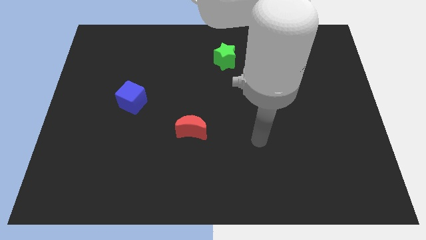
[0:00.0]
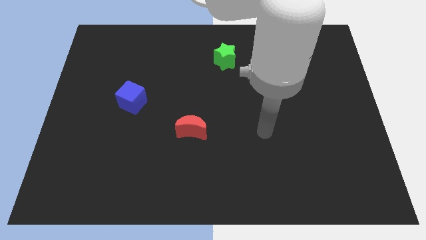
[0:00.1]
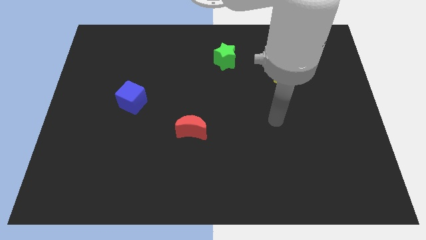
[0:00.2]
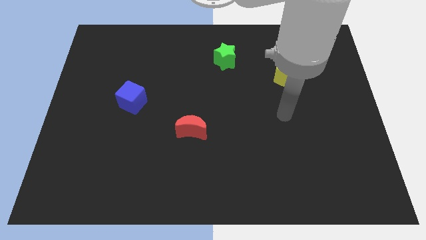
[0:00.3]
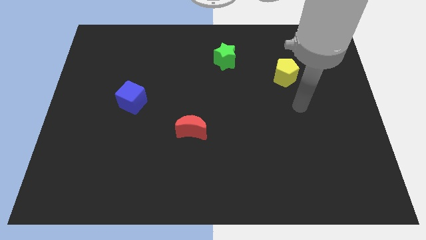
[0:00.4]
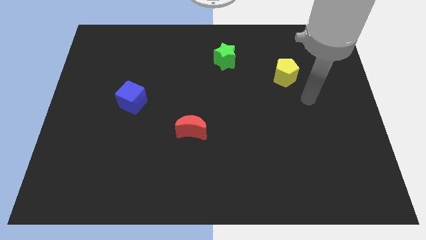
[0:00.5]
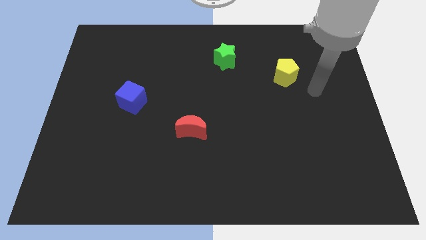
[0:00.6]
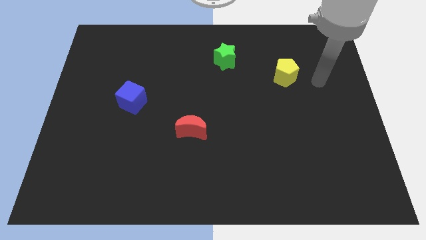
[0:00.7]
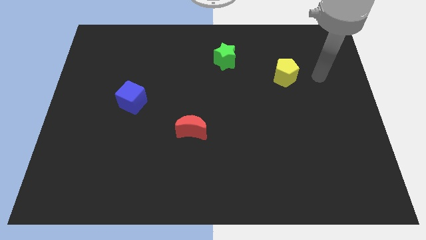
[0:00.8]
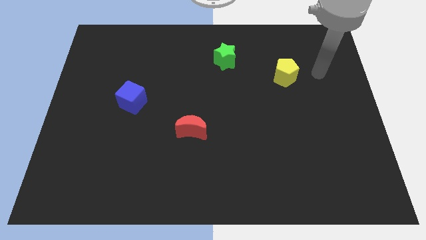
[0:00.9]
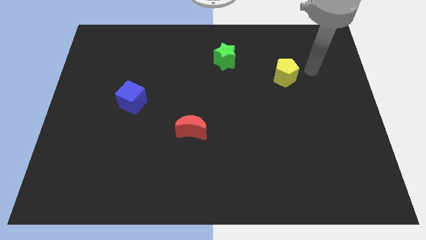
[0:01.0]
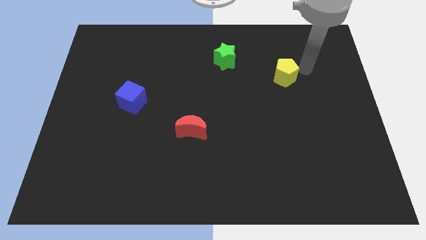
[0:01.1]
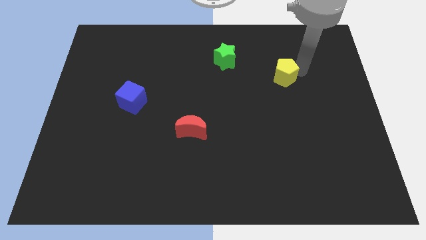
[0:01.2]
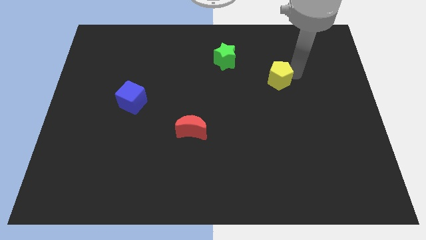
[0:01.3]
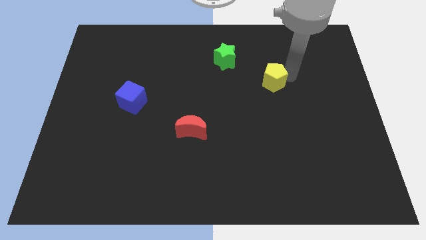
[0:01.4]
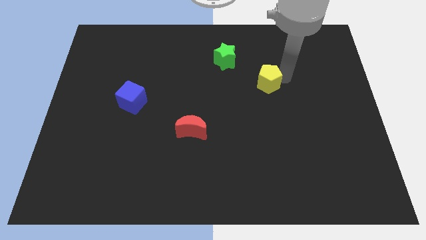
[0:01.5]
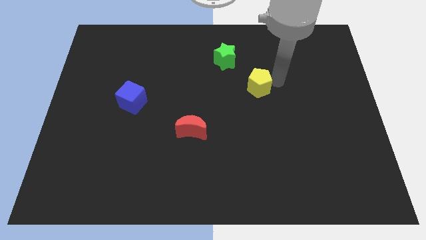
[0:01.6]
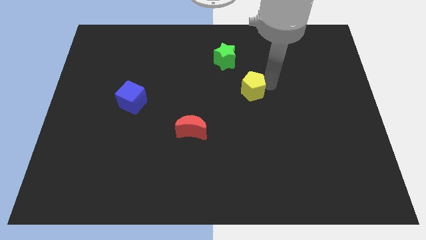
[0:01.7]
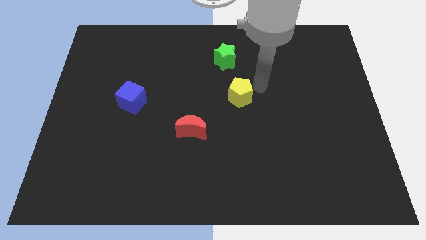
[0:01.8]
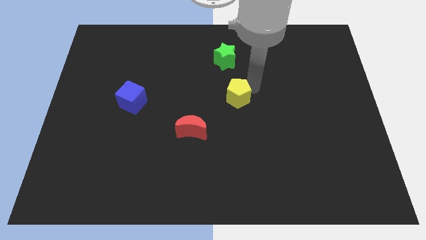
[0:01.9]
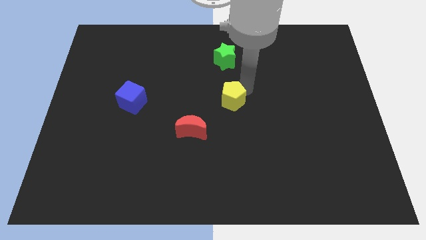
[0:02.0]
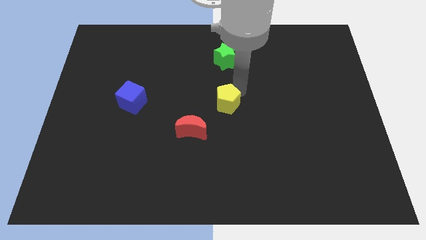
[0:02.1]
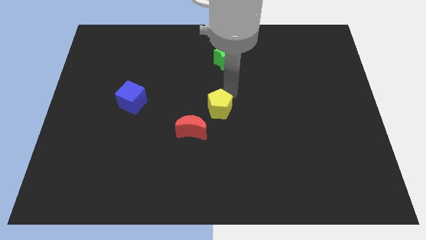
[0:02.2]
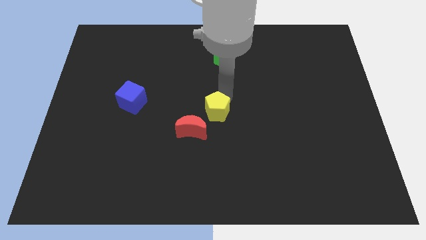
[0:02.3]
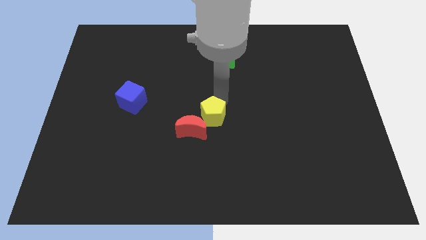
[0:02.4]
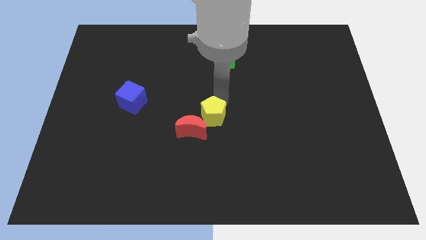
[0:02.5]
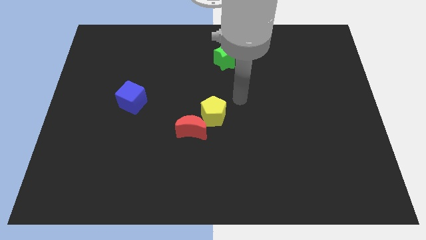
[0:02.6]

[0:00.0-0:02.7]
push the pentagon next to the moon

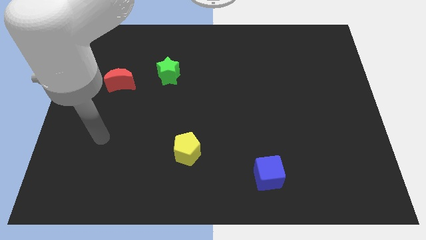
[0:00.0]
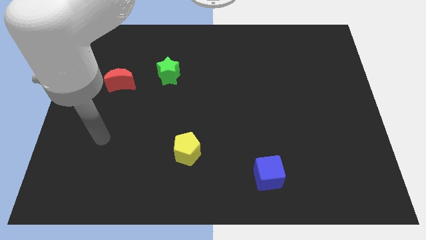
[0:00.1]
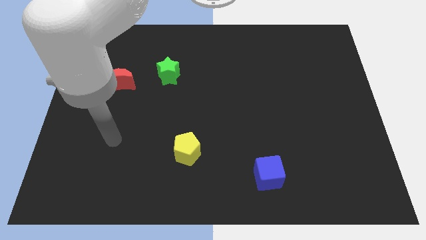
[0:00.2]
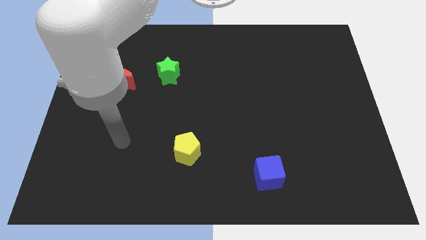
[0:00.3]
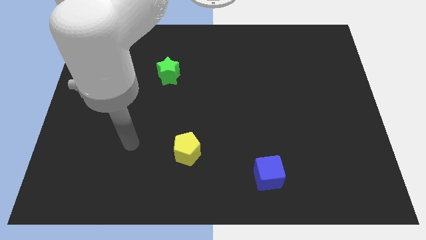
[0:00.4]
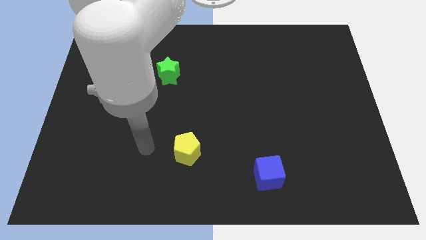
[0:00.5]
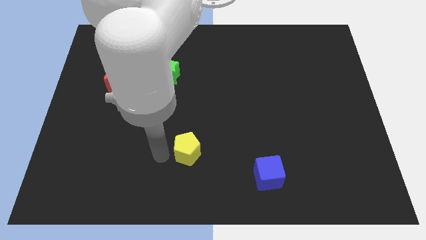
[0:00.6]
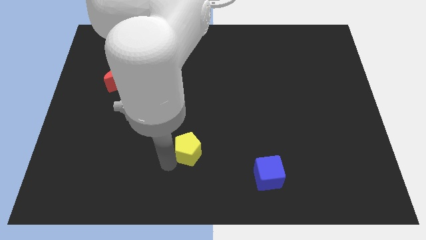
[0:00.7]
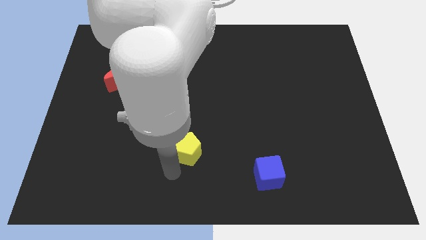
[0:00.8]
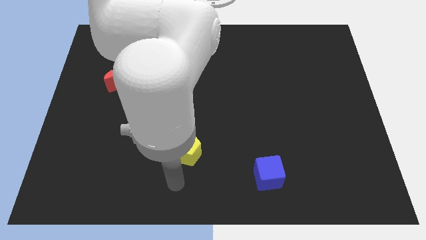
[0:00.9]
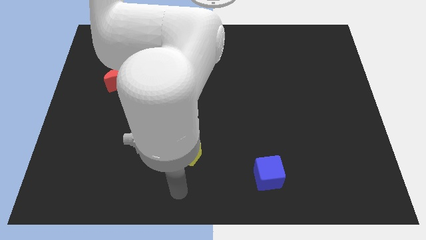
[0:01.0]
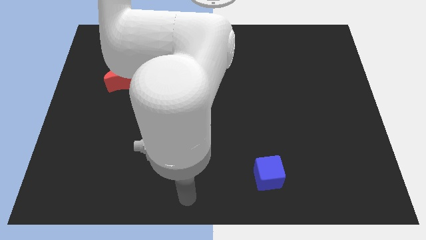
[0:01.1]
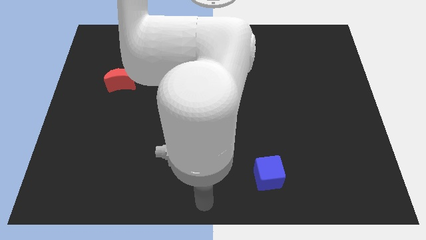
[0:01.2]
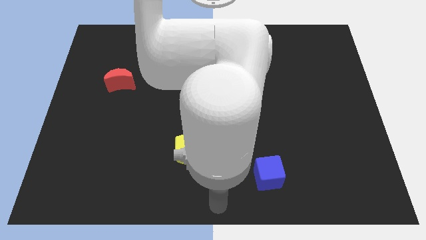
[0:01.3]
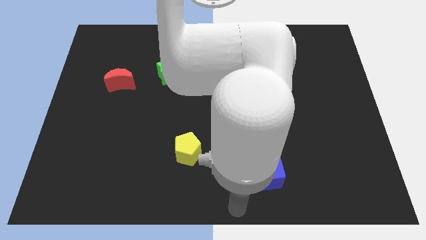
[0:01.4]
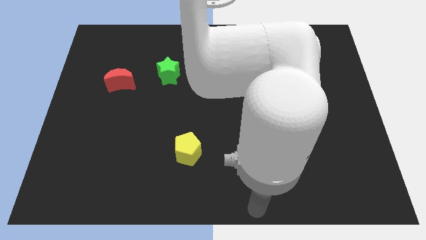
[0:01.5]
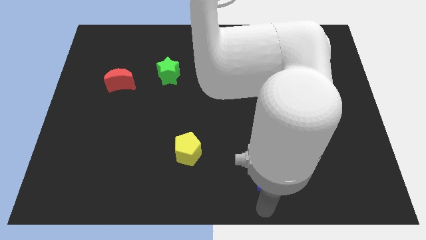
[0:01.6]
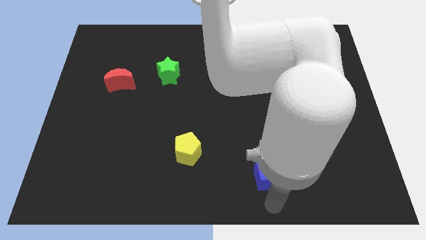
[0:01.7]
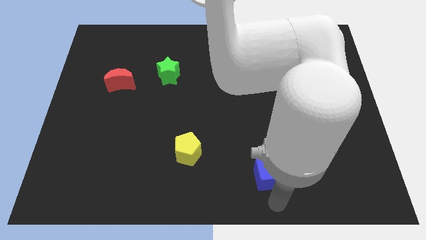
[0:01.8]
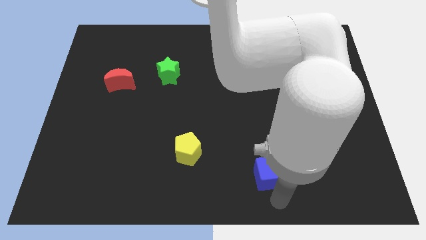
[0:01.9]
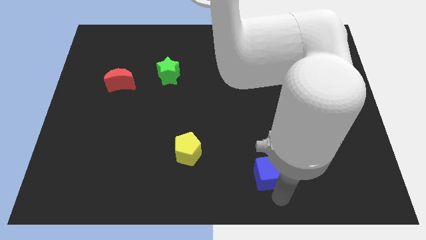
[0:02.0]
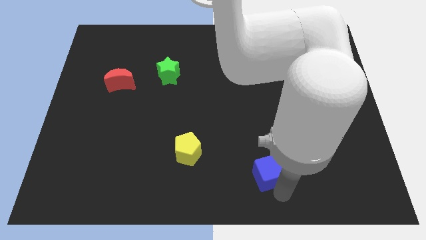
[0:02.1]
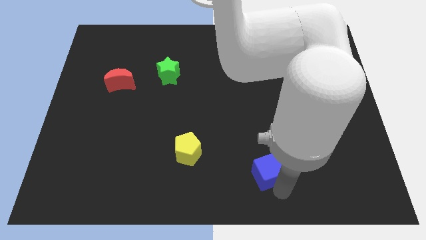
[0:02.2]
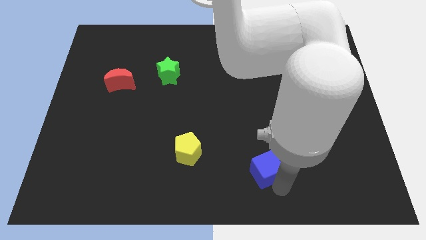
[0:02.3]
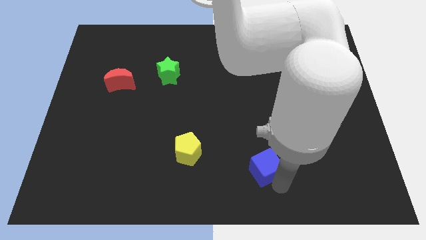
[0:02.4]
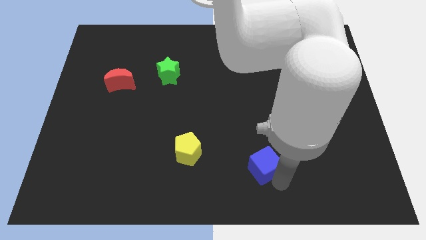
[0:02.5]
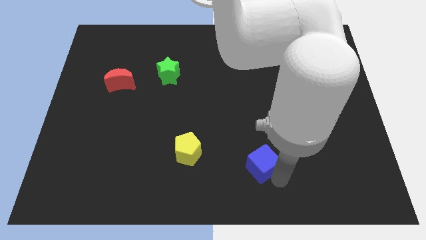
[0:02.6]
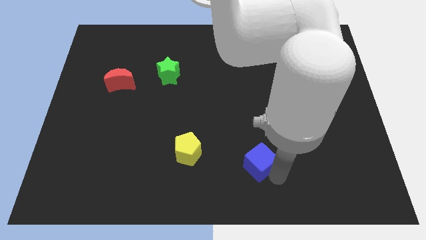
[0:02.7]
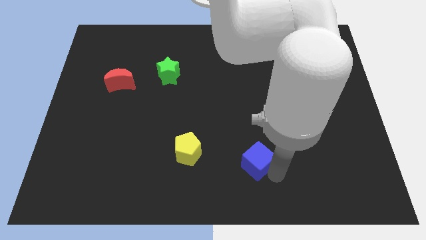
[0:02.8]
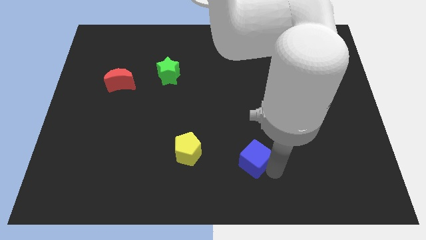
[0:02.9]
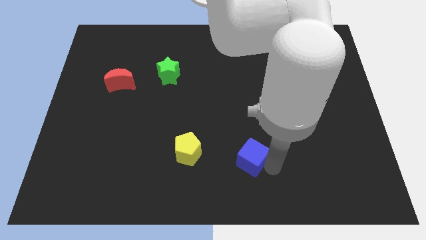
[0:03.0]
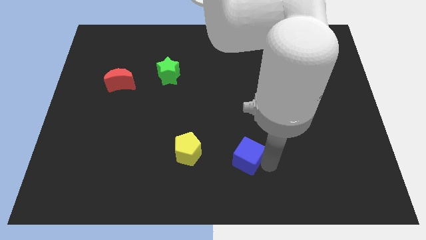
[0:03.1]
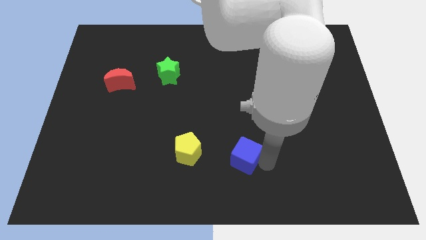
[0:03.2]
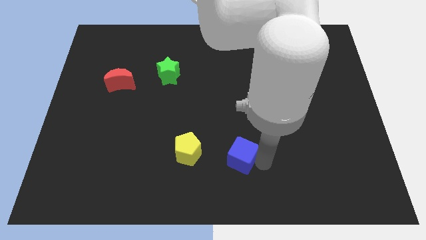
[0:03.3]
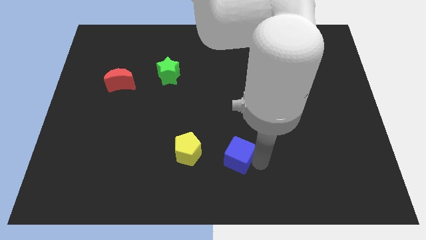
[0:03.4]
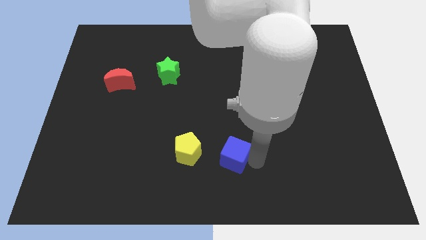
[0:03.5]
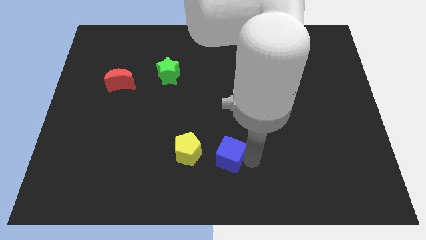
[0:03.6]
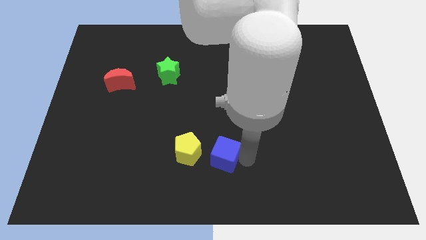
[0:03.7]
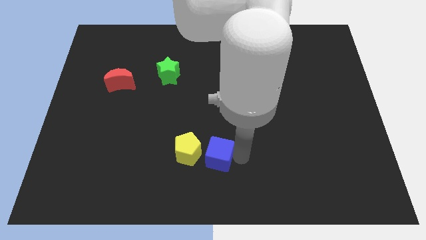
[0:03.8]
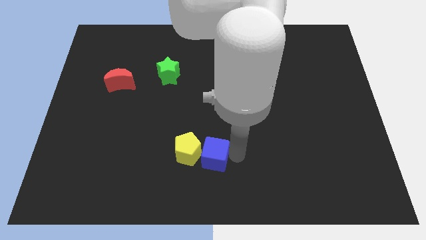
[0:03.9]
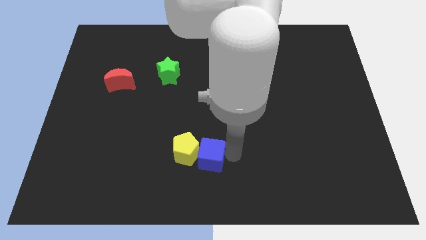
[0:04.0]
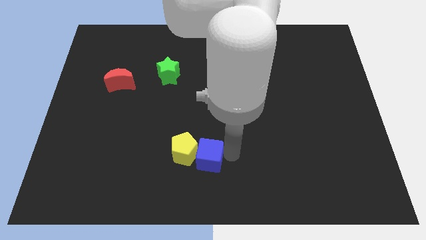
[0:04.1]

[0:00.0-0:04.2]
put the blue cube to the yellow block

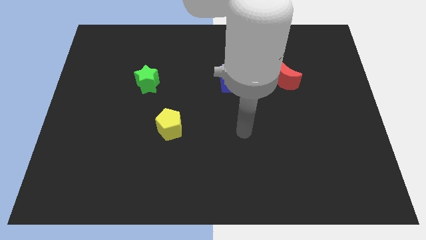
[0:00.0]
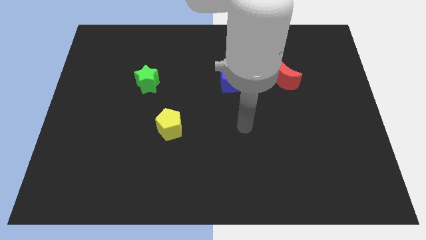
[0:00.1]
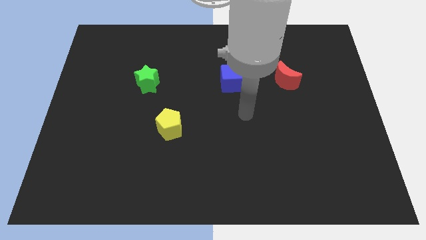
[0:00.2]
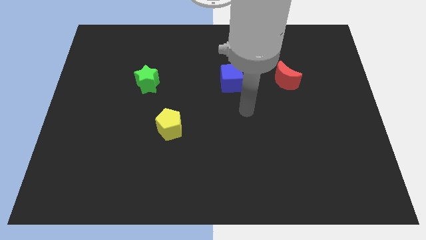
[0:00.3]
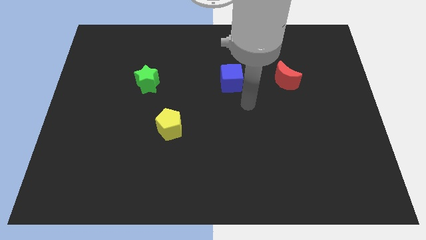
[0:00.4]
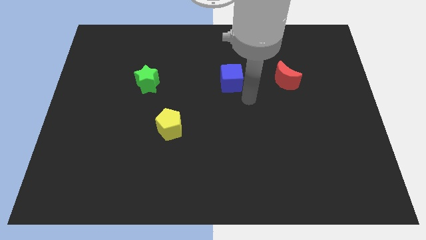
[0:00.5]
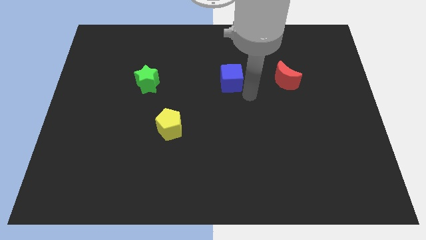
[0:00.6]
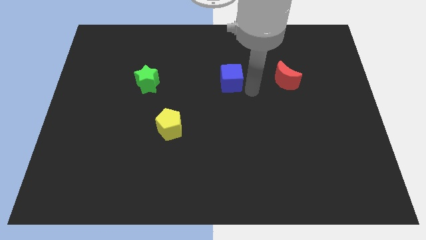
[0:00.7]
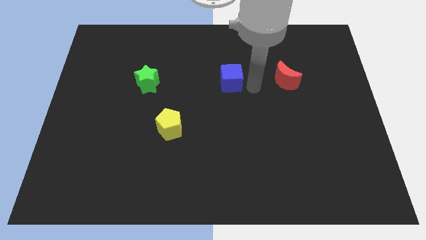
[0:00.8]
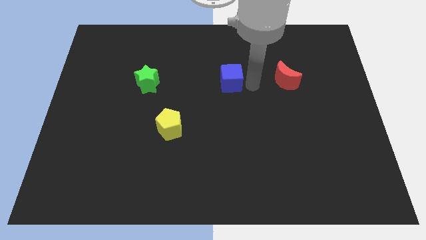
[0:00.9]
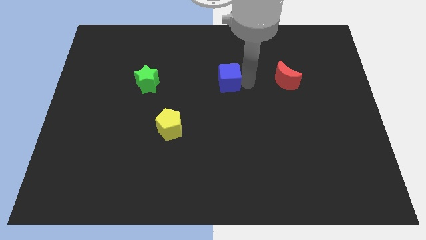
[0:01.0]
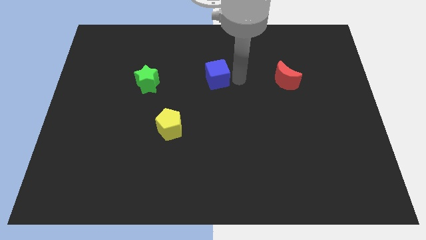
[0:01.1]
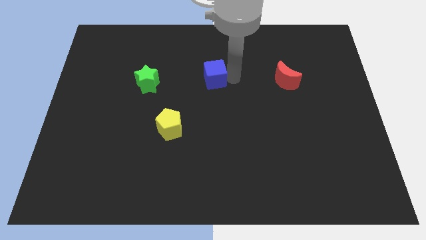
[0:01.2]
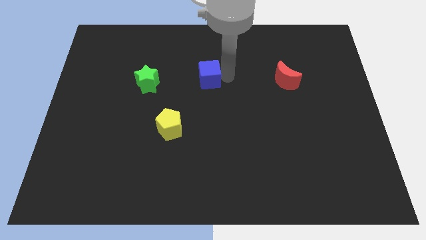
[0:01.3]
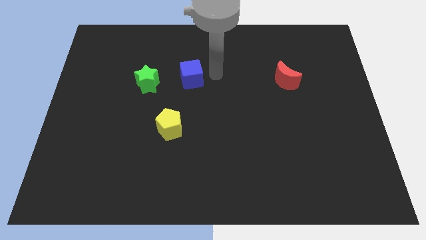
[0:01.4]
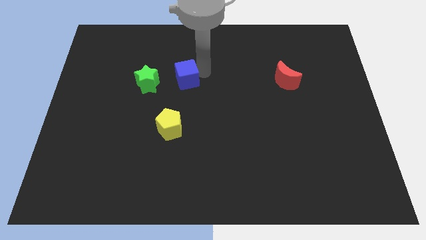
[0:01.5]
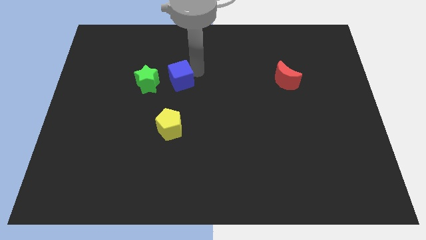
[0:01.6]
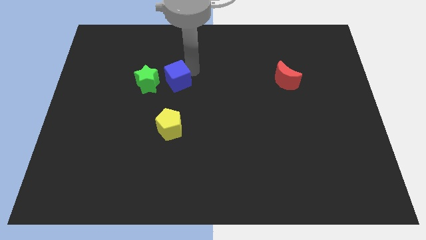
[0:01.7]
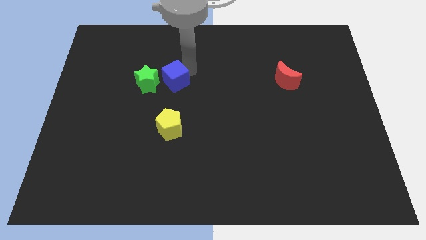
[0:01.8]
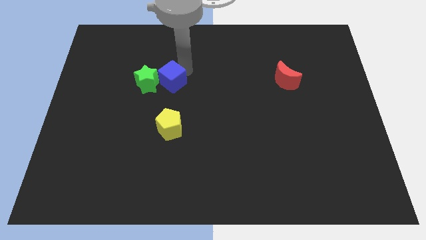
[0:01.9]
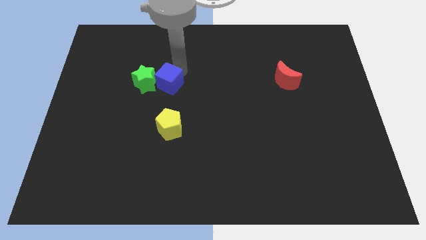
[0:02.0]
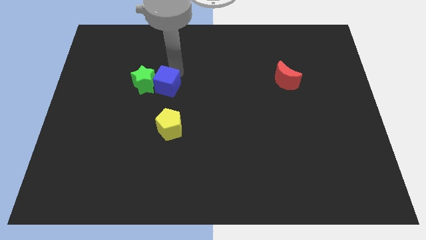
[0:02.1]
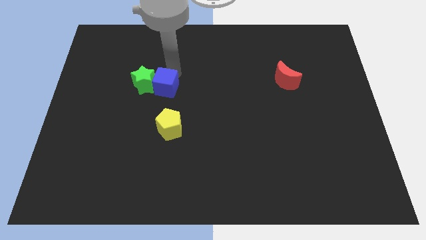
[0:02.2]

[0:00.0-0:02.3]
push the blue block next to the green star
